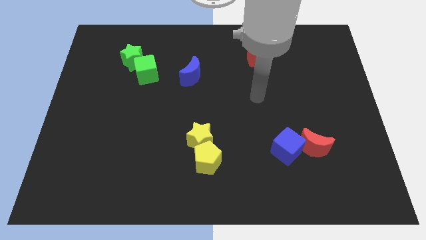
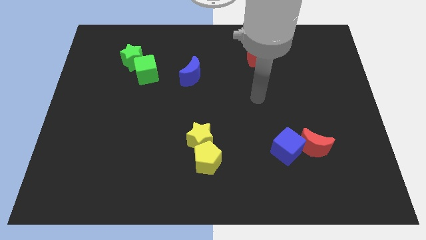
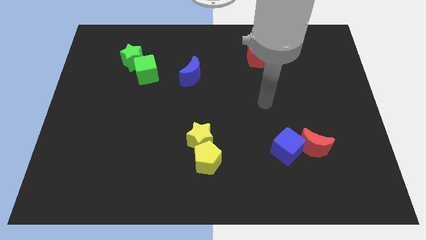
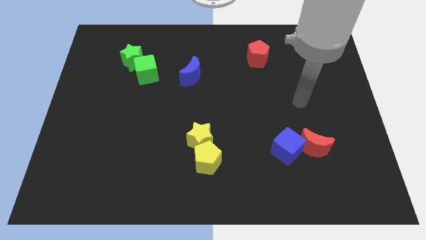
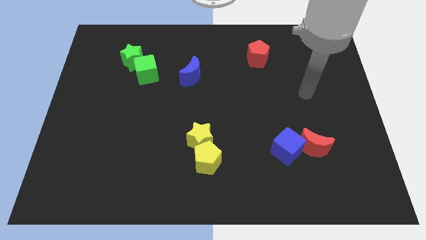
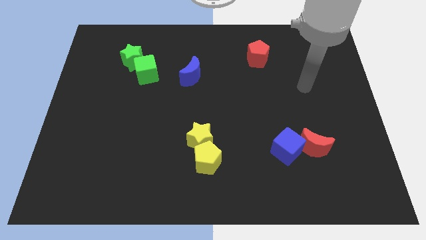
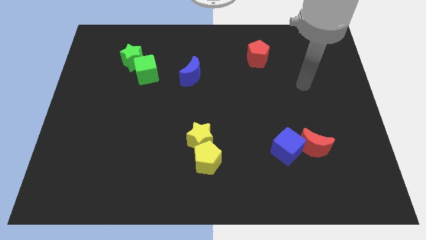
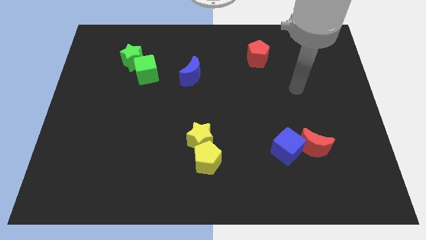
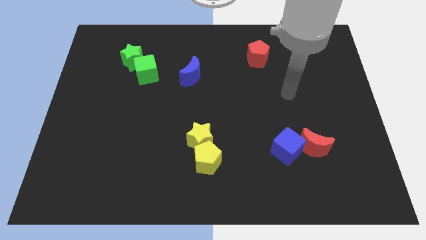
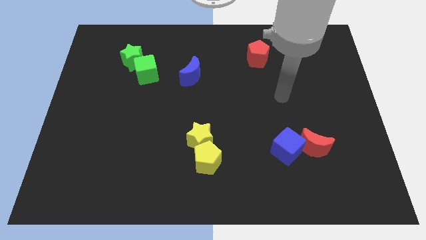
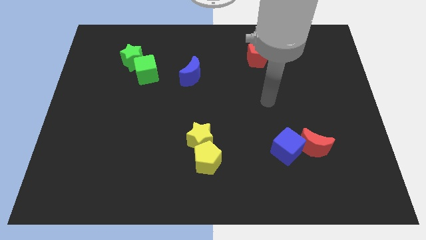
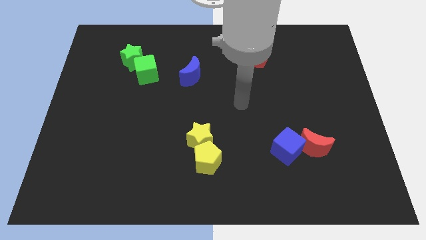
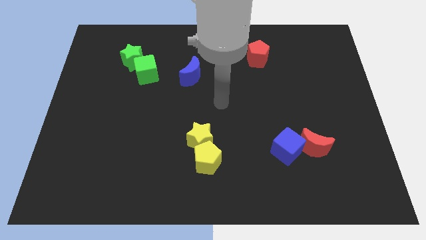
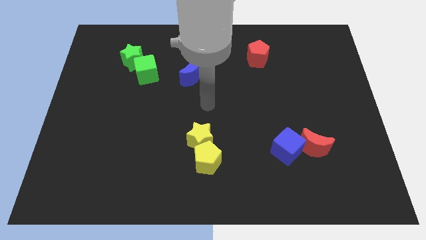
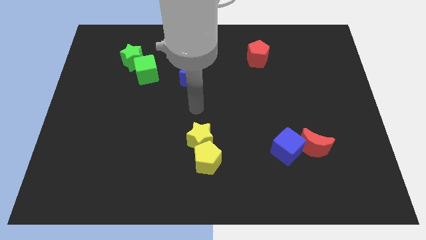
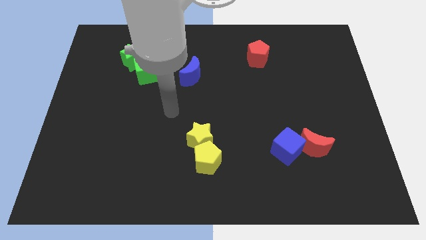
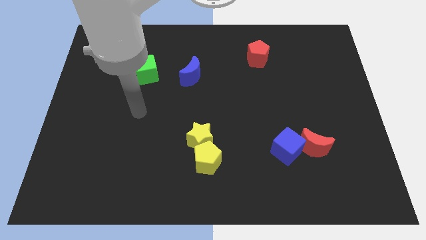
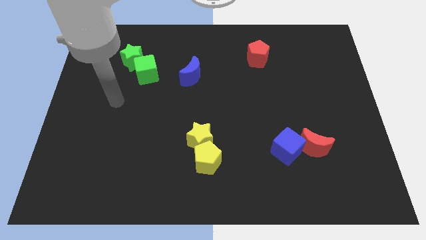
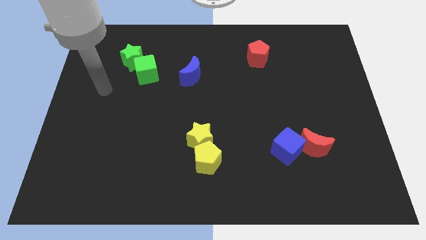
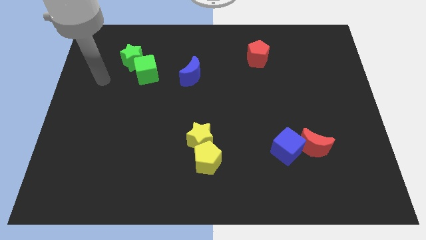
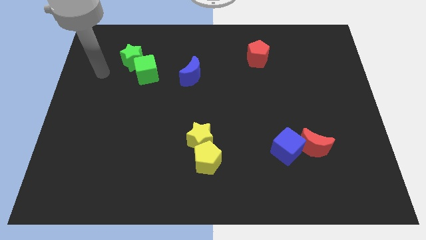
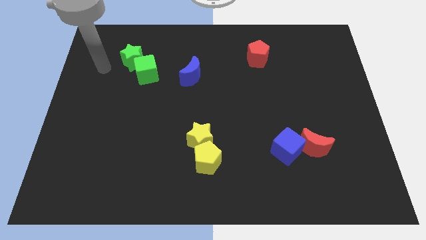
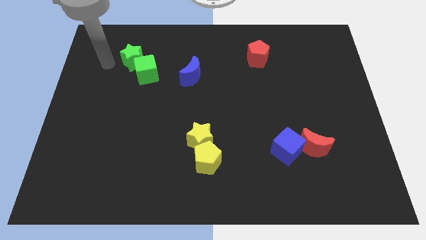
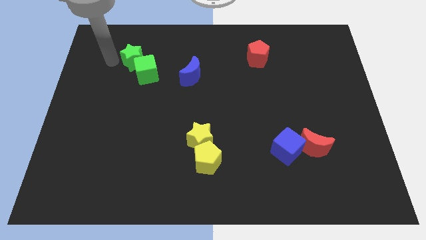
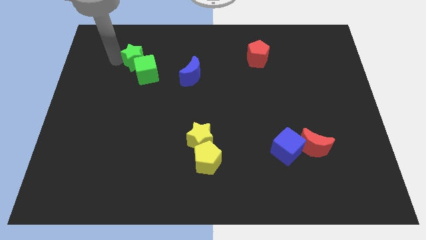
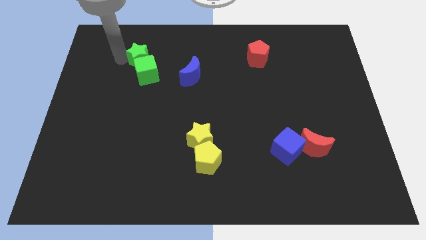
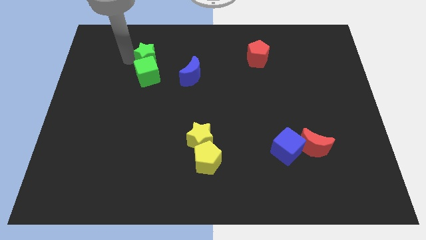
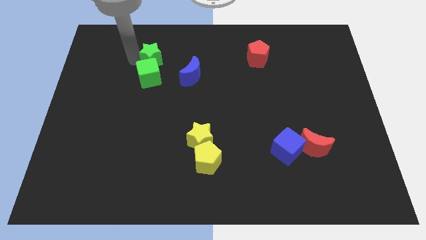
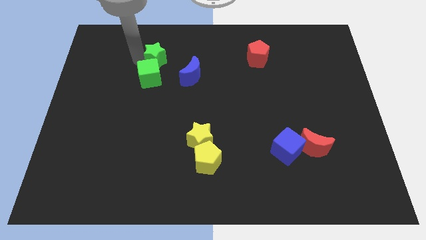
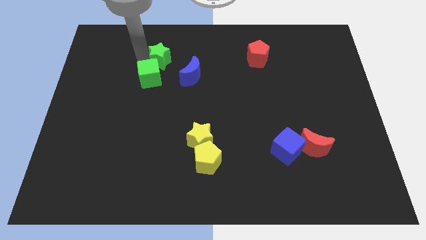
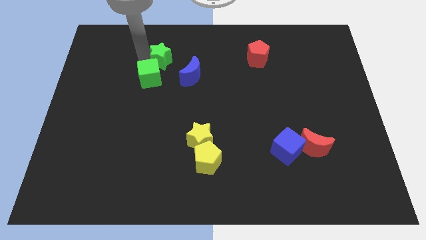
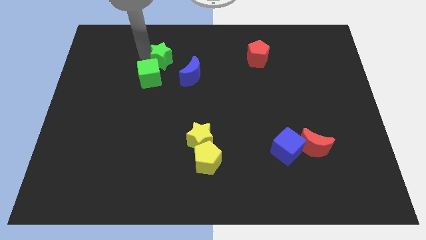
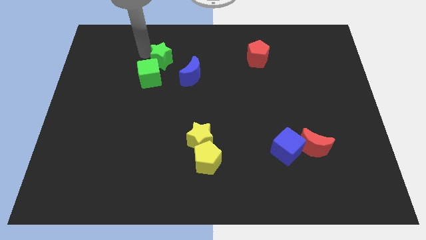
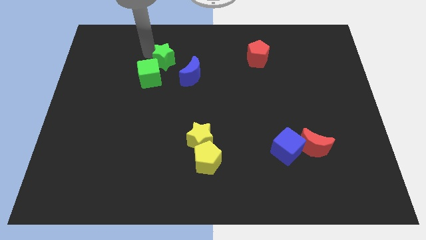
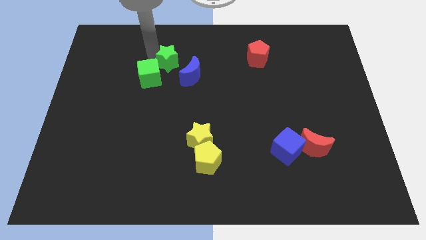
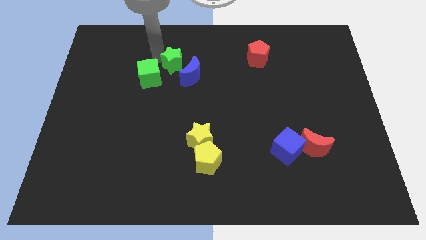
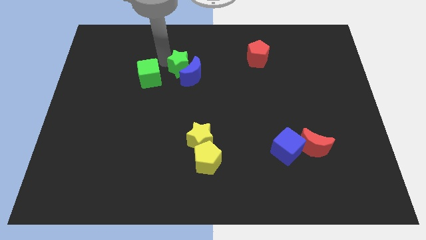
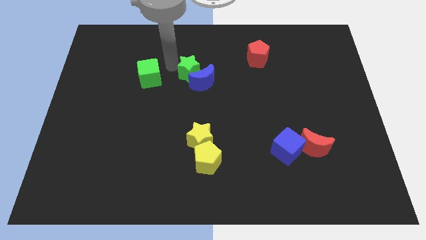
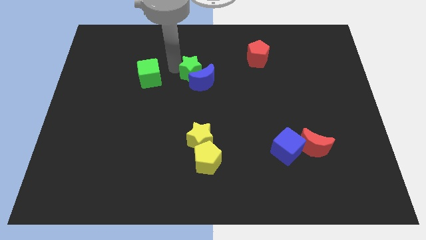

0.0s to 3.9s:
put the green star towards the blue moon

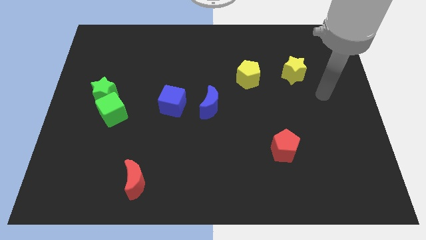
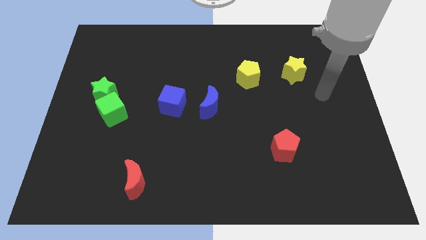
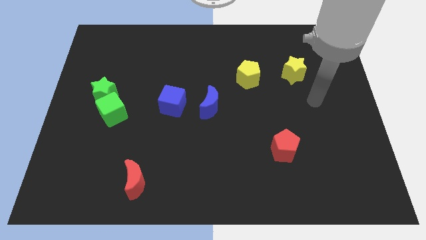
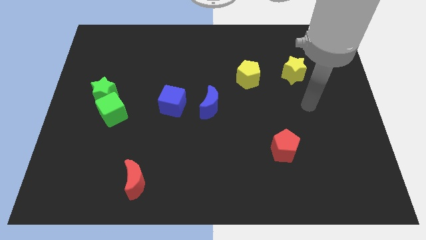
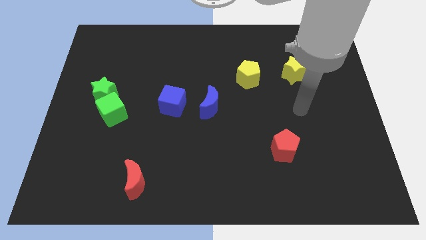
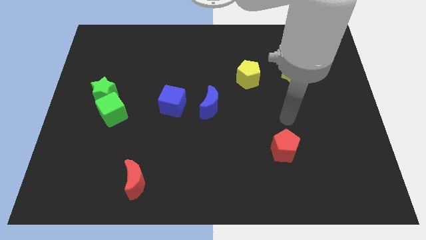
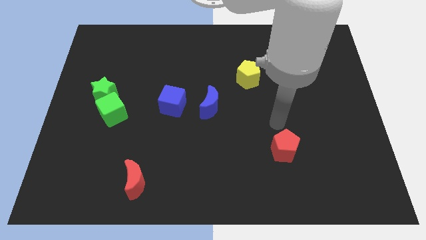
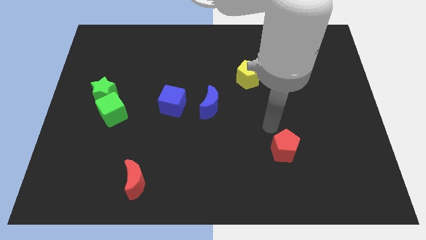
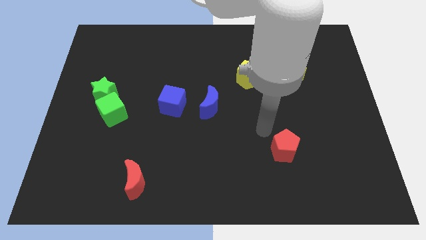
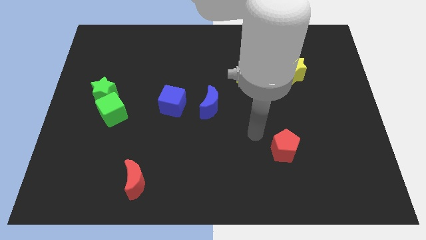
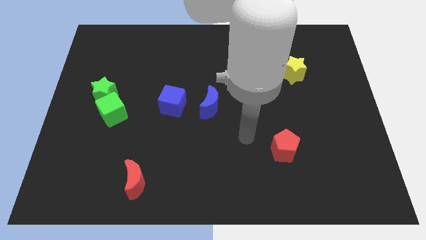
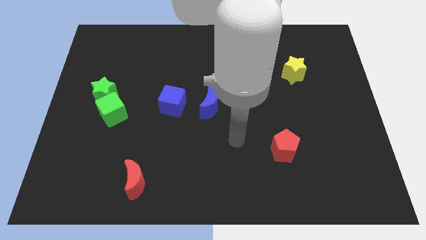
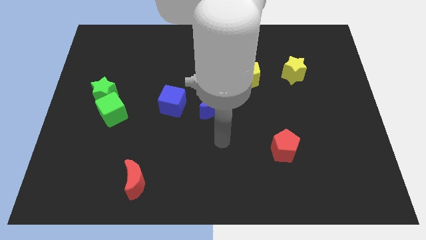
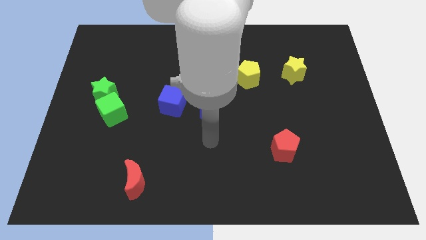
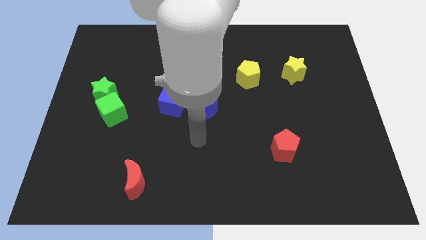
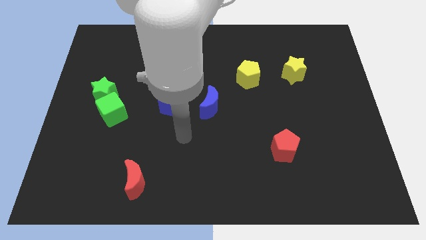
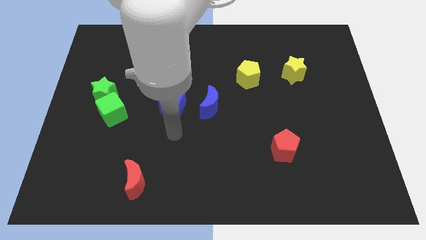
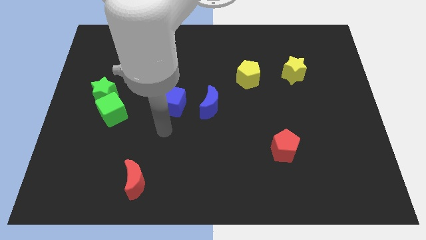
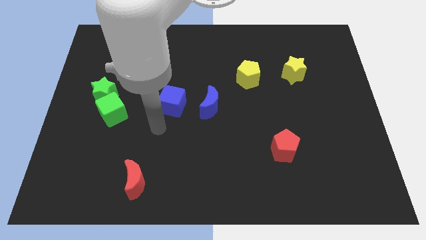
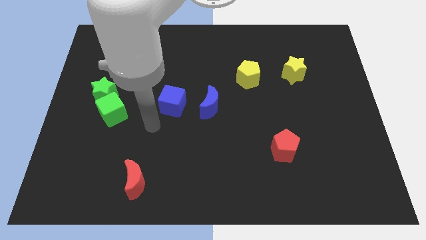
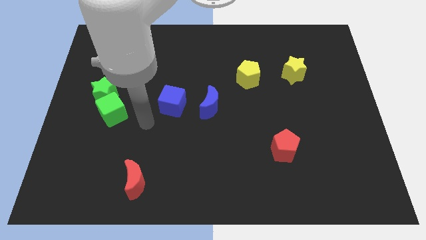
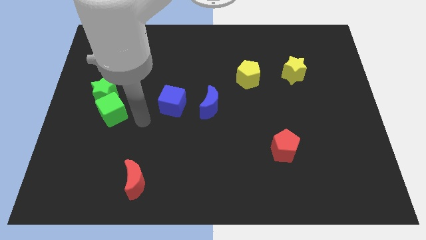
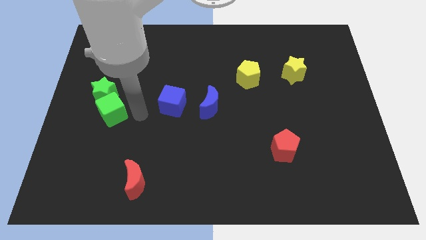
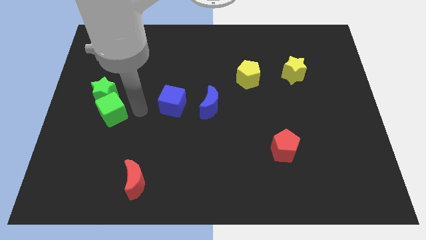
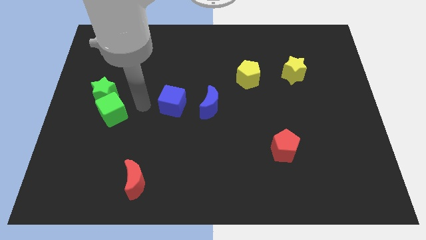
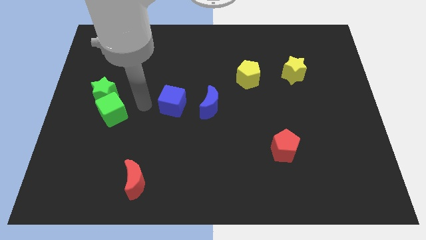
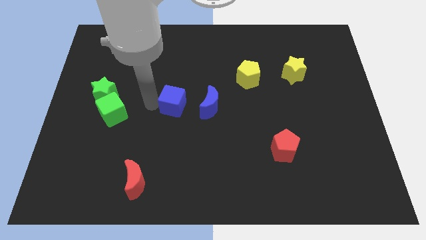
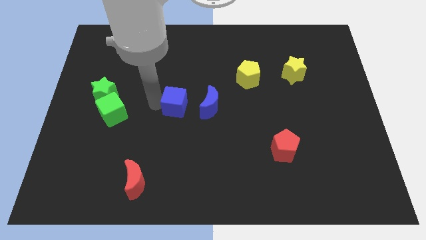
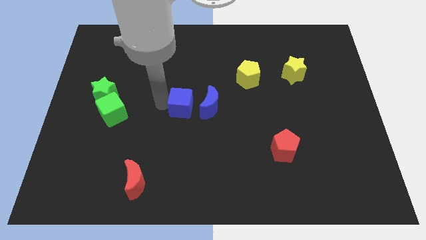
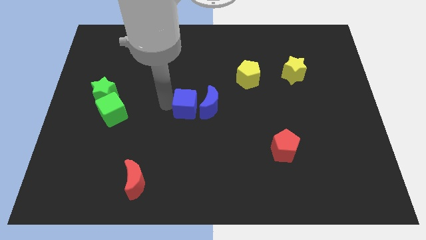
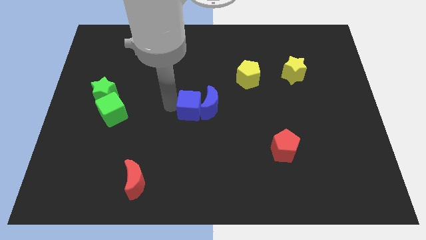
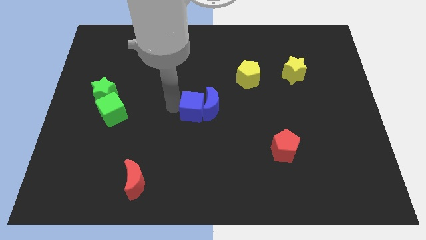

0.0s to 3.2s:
move the blue cube next to the blue moon

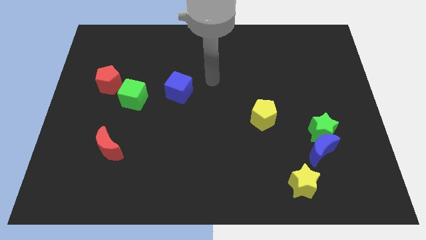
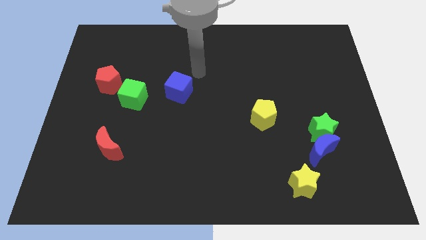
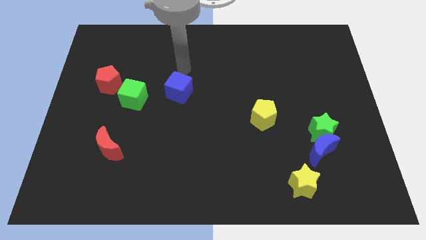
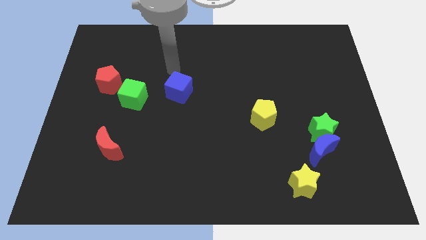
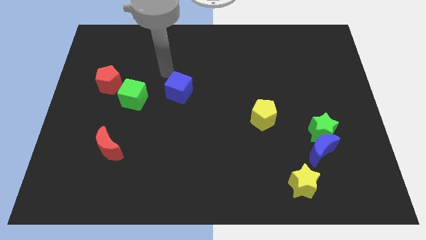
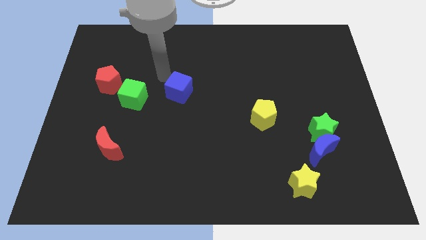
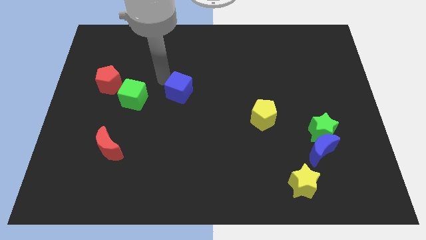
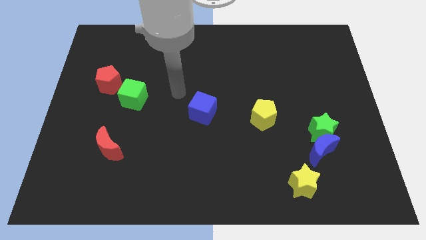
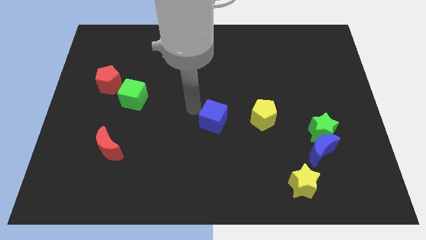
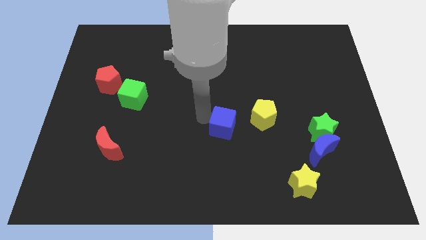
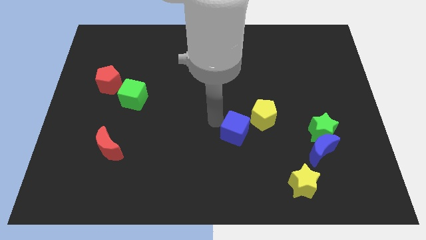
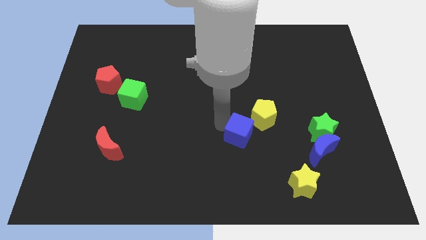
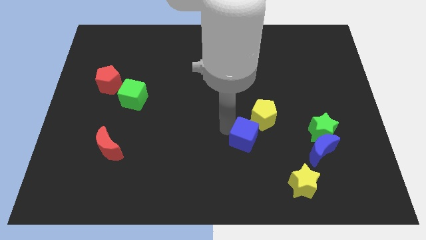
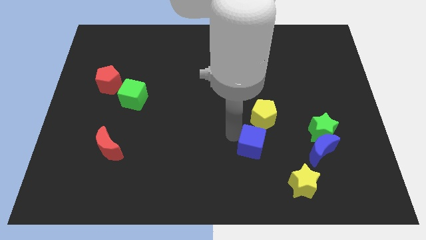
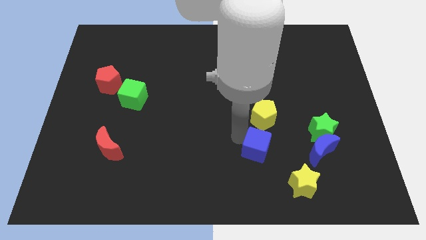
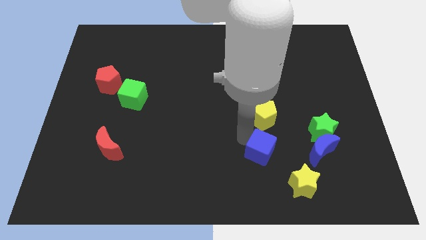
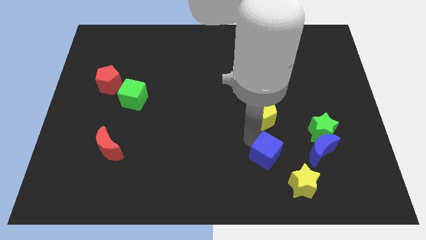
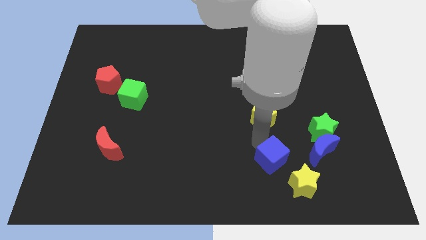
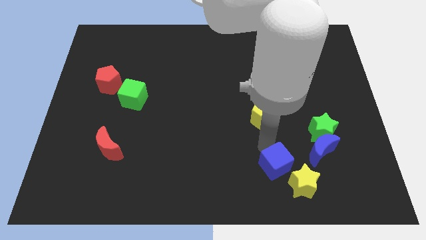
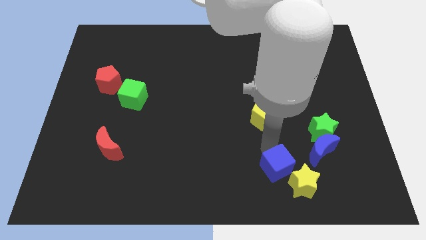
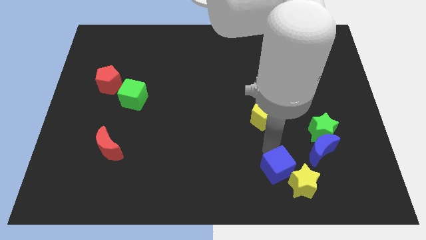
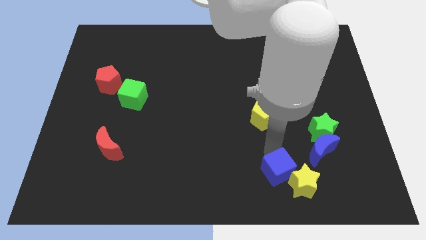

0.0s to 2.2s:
slide the blue cube towards the yellow star
